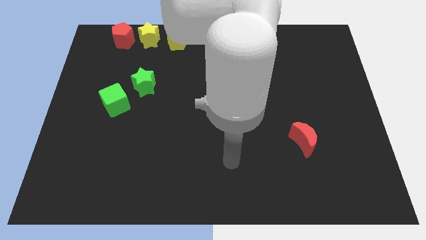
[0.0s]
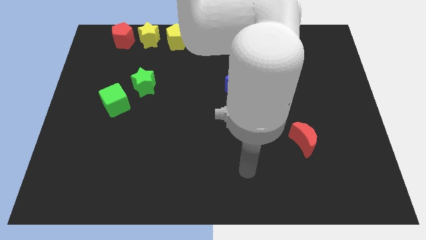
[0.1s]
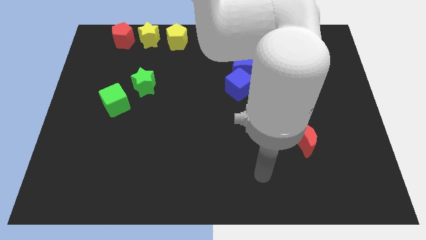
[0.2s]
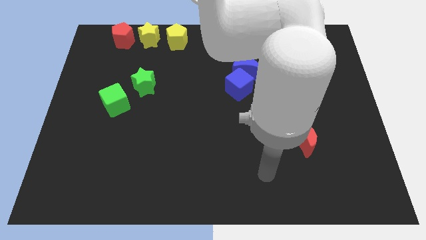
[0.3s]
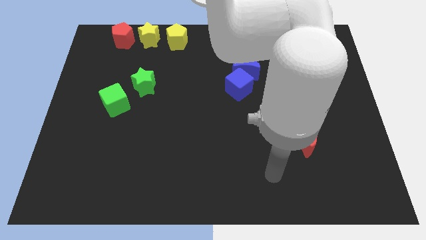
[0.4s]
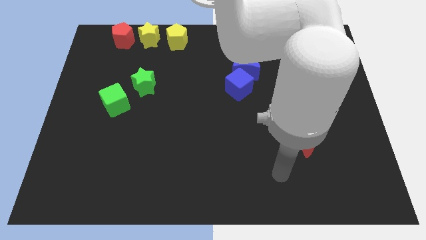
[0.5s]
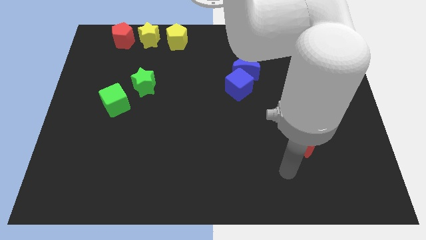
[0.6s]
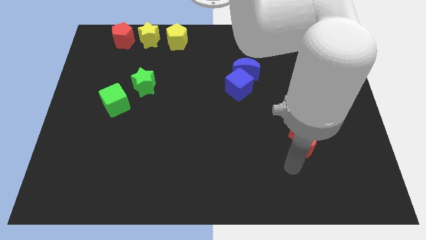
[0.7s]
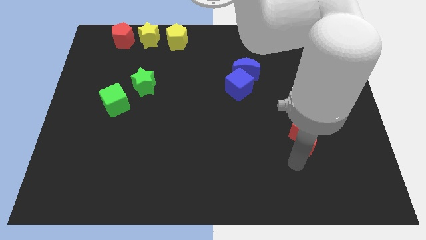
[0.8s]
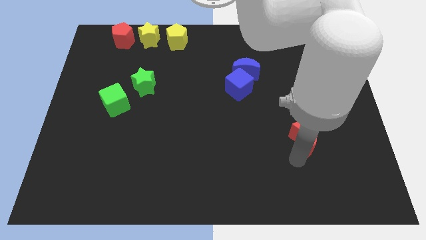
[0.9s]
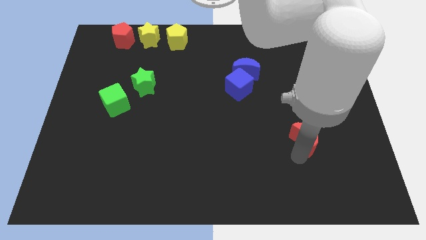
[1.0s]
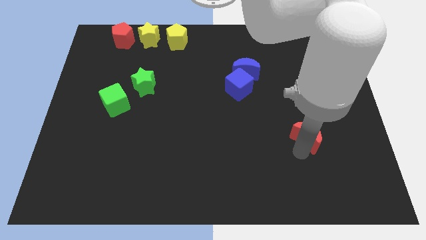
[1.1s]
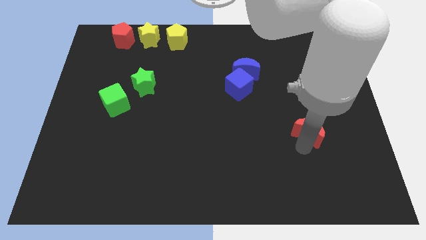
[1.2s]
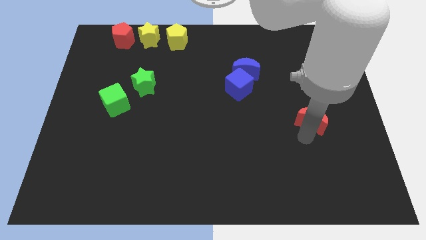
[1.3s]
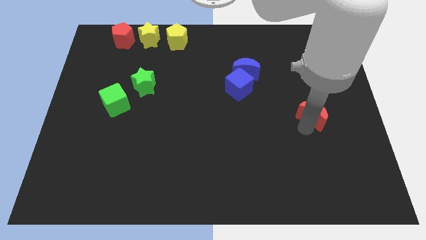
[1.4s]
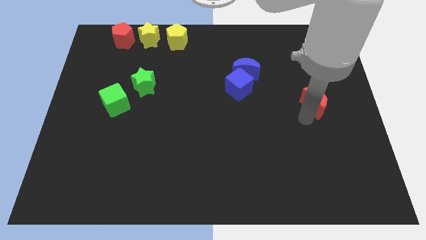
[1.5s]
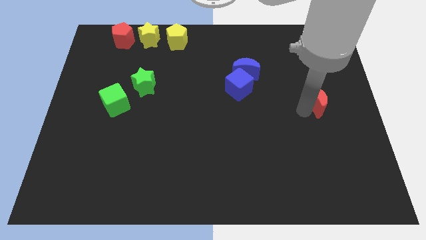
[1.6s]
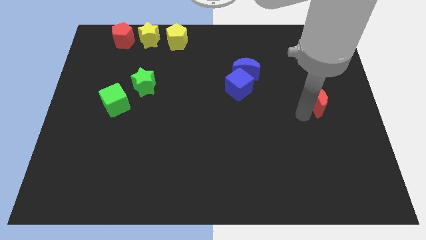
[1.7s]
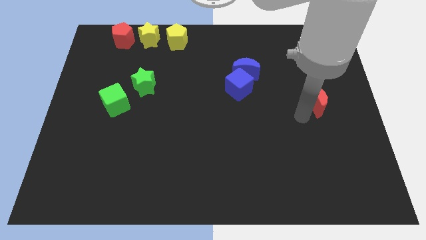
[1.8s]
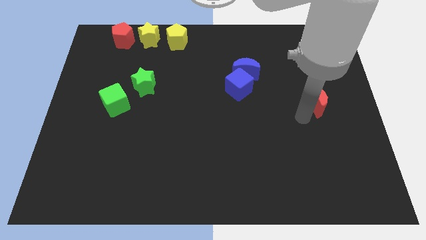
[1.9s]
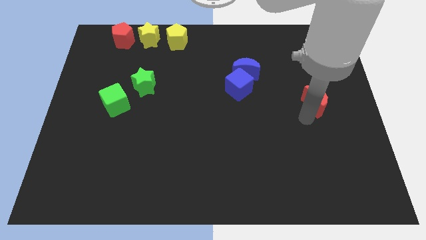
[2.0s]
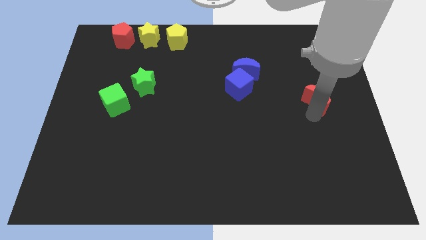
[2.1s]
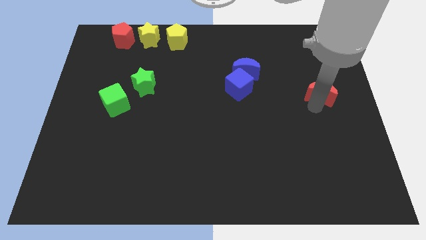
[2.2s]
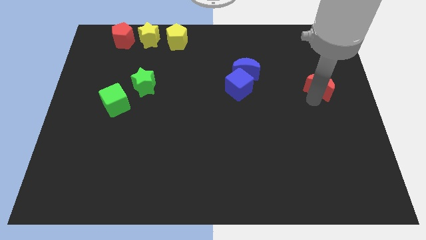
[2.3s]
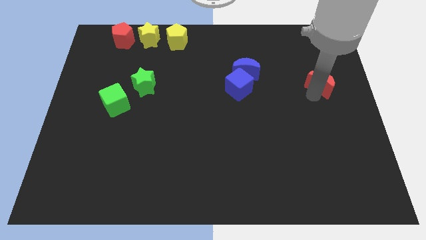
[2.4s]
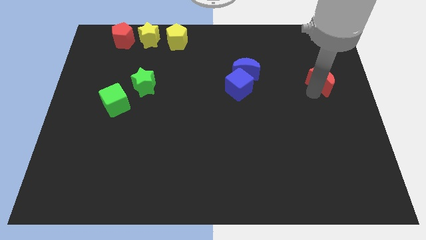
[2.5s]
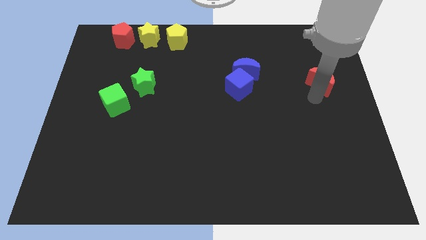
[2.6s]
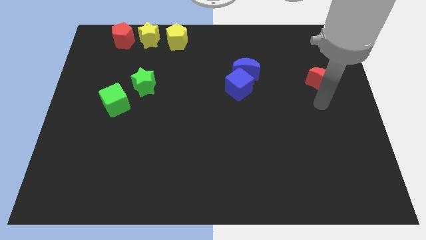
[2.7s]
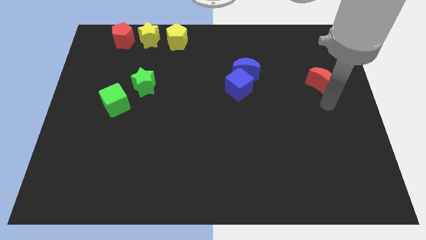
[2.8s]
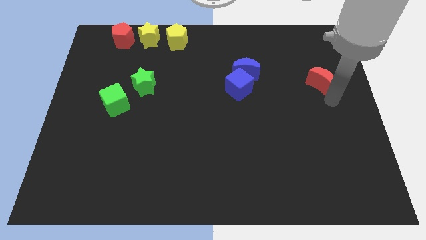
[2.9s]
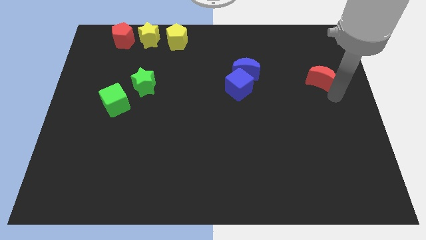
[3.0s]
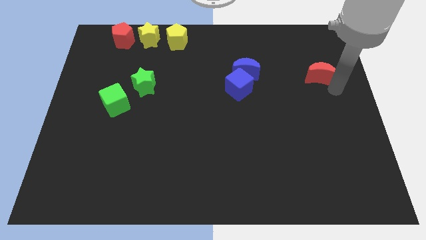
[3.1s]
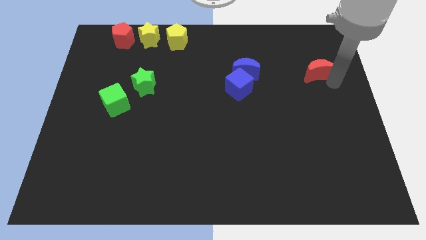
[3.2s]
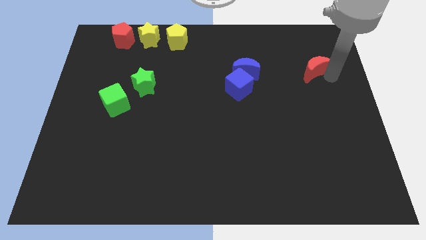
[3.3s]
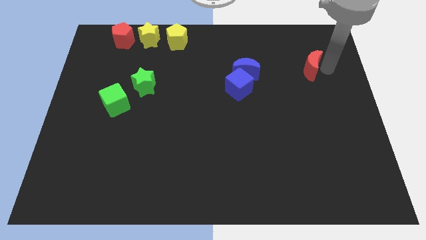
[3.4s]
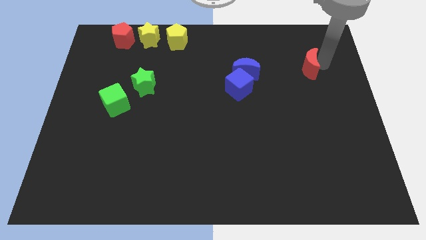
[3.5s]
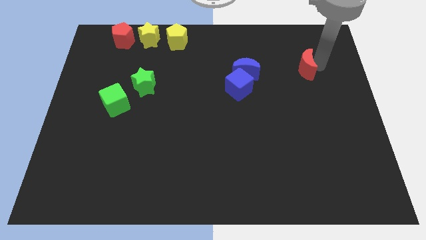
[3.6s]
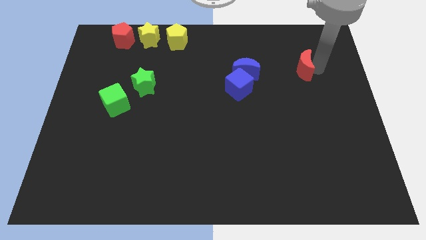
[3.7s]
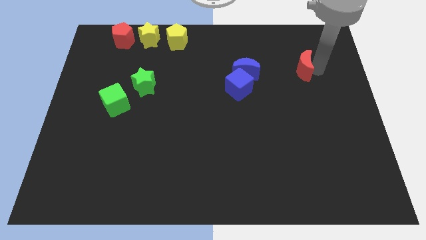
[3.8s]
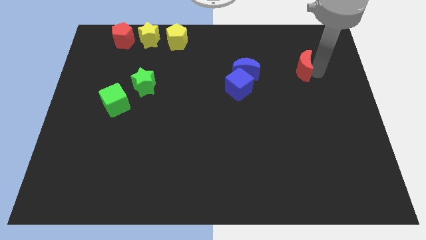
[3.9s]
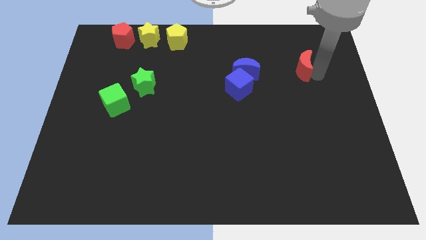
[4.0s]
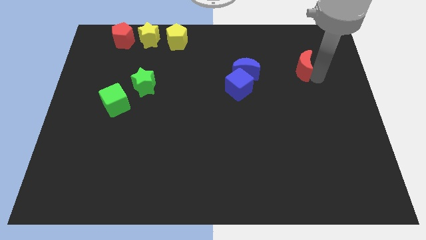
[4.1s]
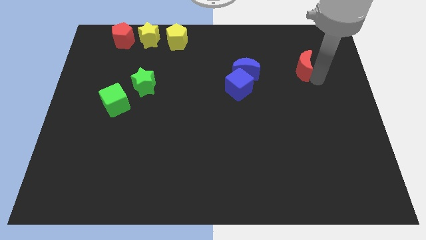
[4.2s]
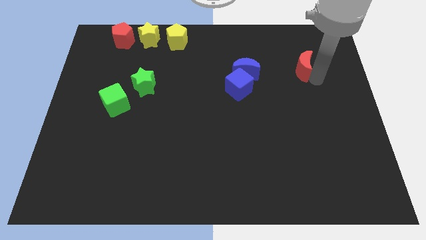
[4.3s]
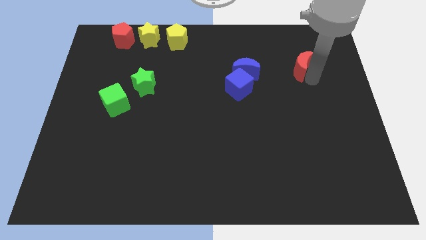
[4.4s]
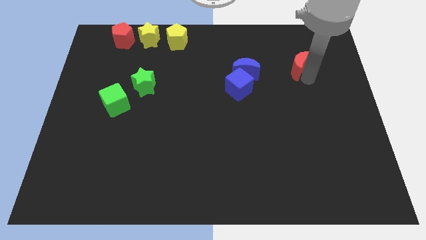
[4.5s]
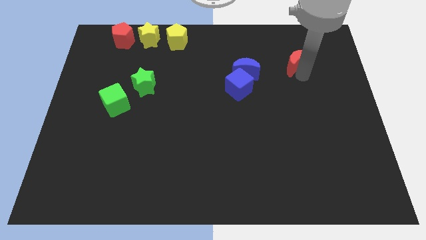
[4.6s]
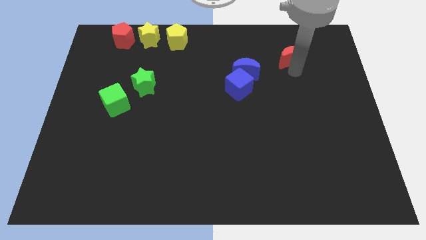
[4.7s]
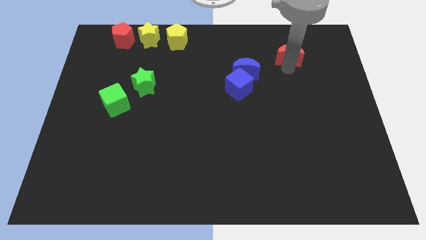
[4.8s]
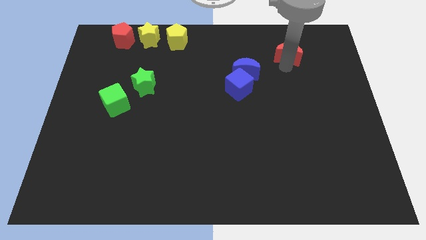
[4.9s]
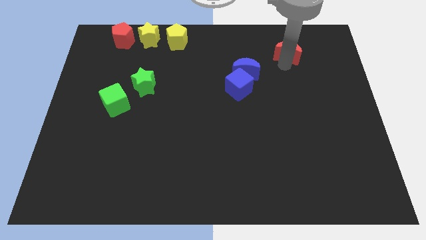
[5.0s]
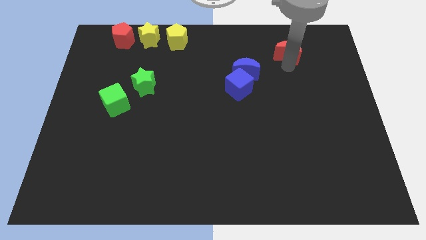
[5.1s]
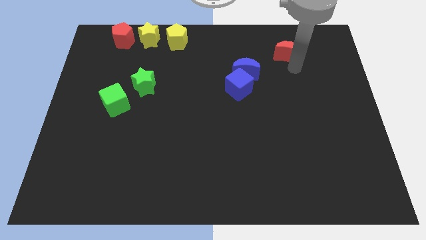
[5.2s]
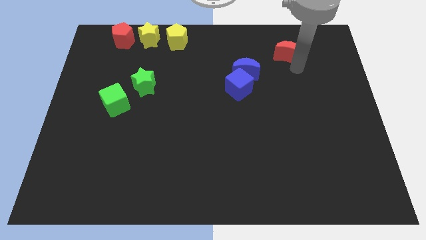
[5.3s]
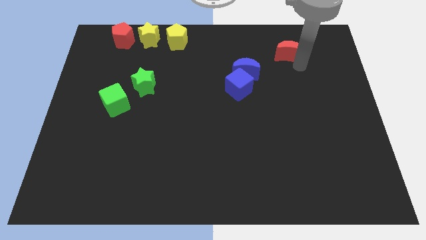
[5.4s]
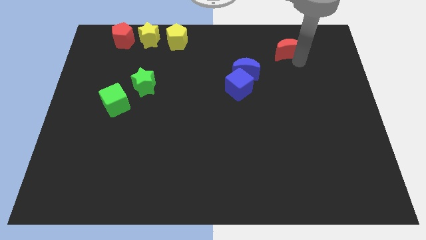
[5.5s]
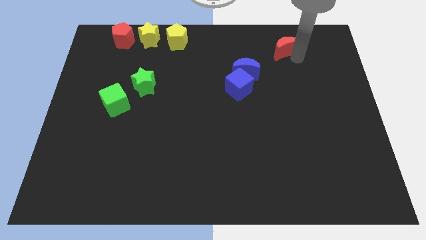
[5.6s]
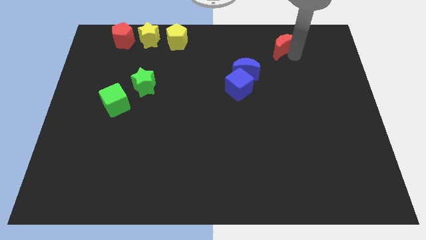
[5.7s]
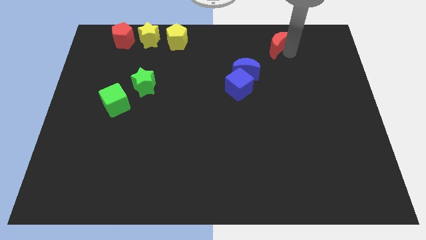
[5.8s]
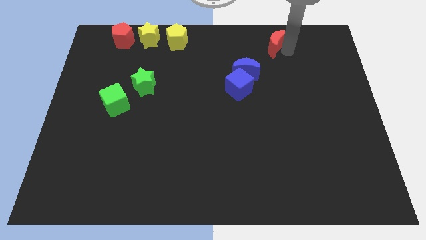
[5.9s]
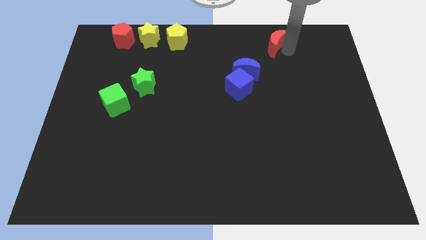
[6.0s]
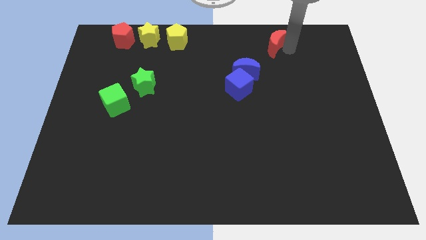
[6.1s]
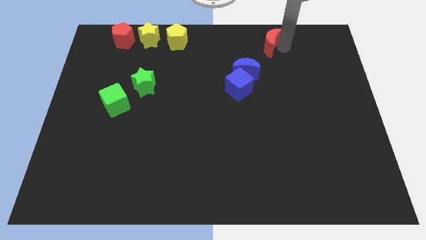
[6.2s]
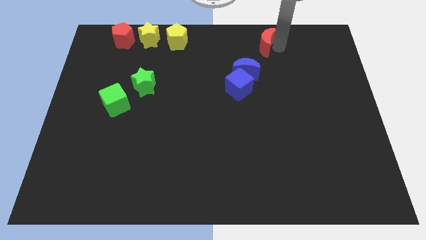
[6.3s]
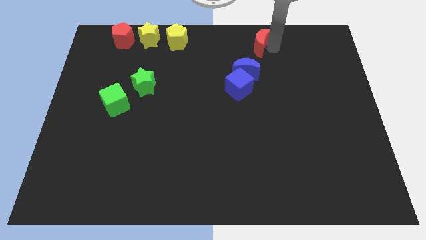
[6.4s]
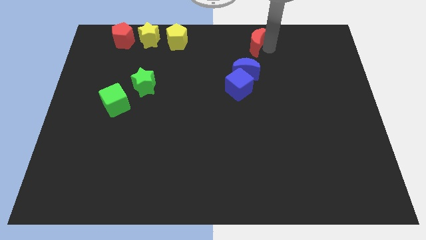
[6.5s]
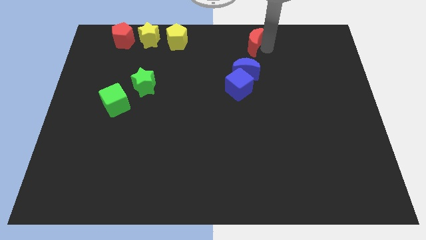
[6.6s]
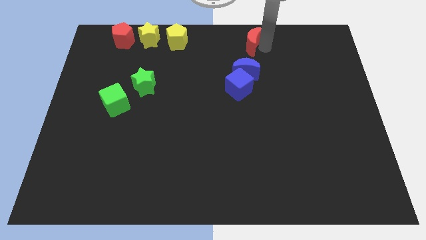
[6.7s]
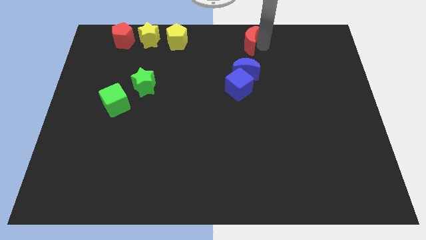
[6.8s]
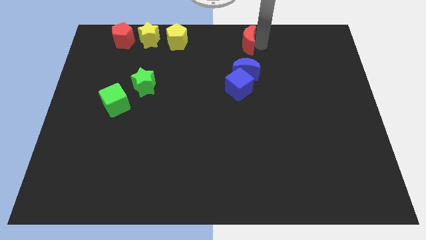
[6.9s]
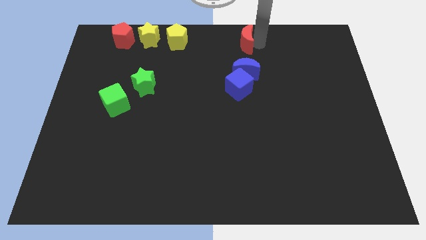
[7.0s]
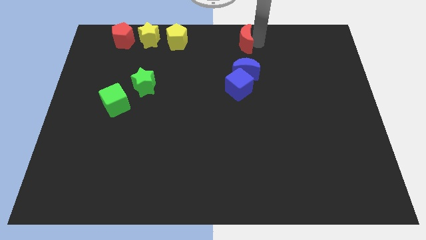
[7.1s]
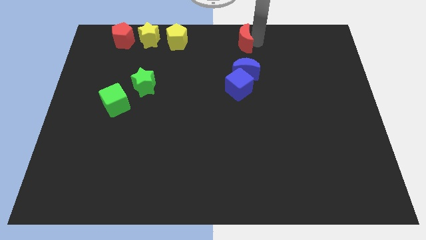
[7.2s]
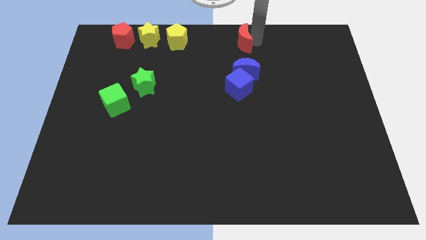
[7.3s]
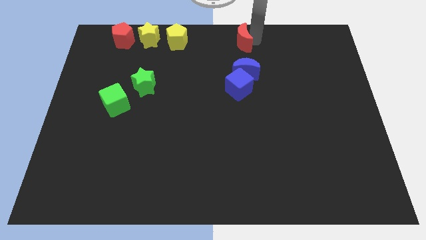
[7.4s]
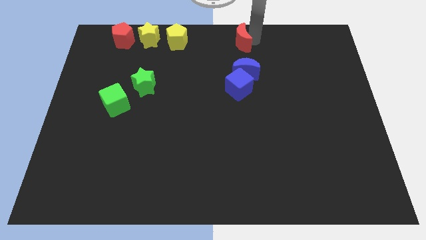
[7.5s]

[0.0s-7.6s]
place the red moon above the blue moon

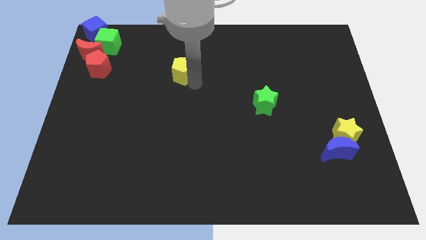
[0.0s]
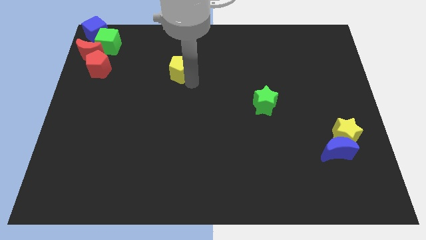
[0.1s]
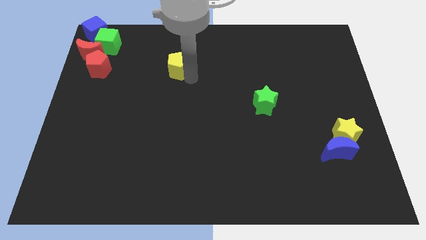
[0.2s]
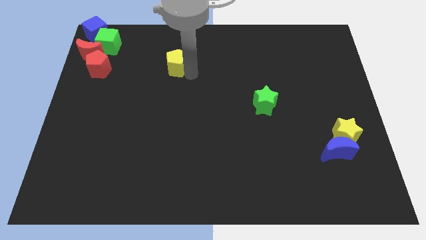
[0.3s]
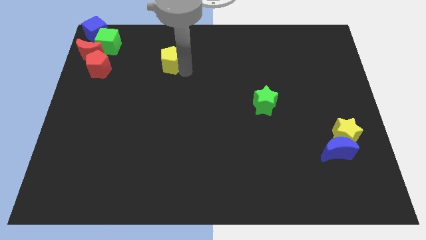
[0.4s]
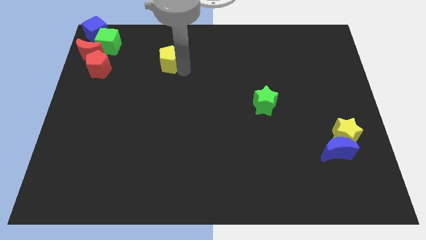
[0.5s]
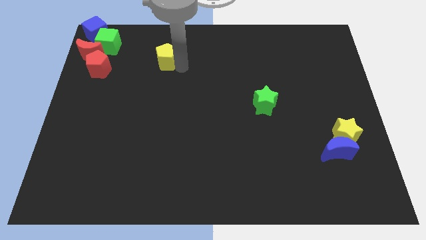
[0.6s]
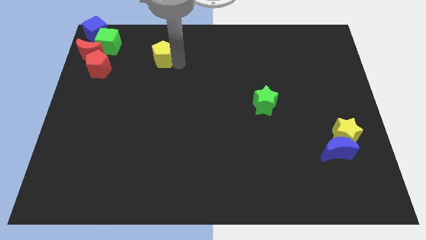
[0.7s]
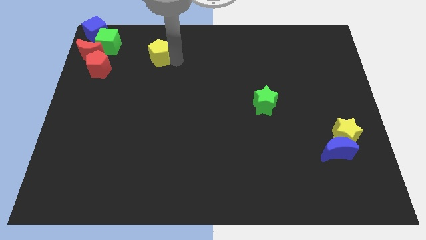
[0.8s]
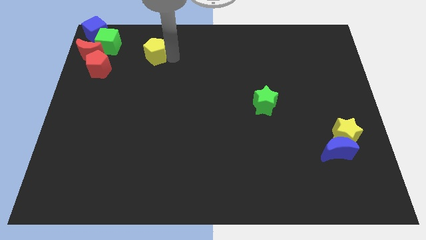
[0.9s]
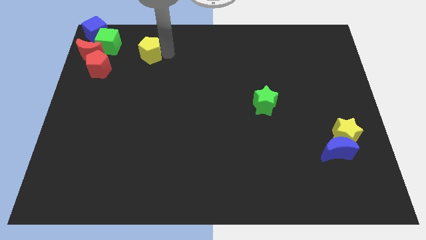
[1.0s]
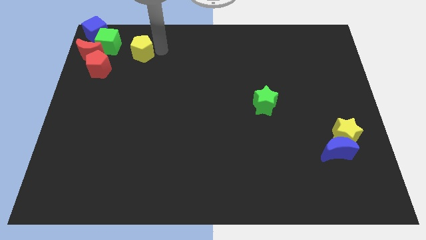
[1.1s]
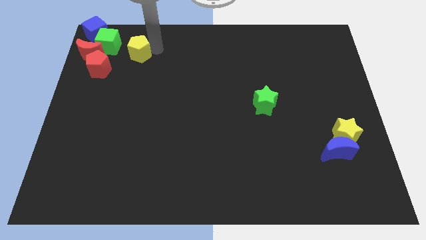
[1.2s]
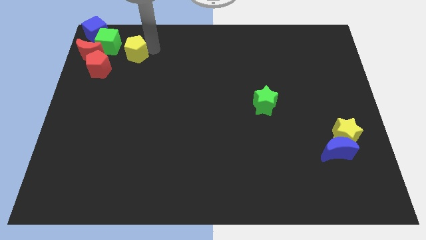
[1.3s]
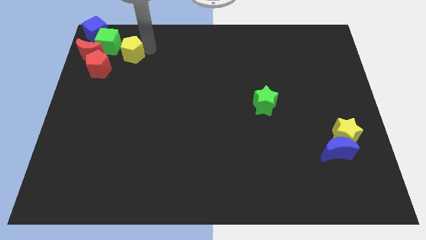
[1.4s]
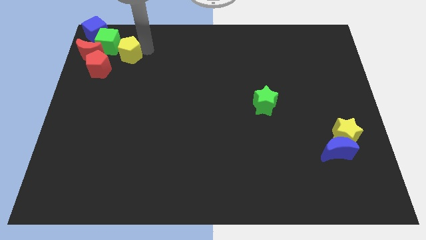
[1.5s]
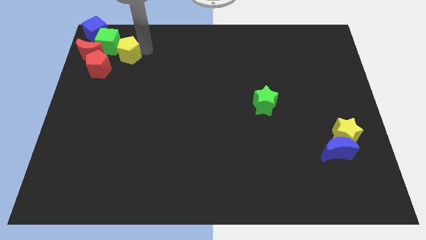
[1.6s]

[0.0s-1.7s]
move the yellow pentagon close to the green cube
